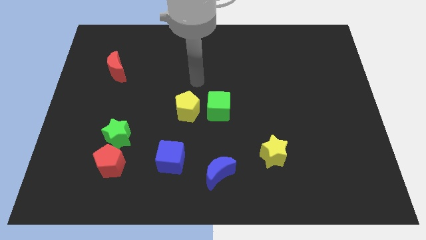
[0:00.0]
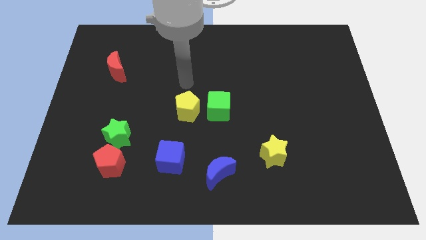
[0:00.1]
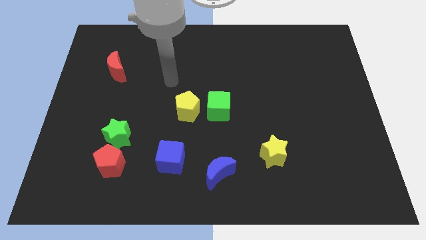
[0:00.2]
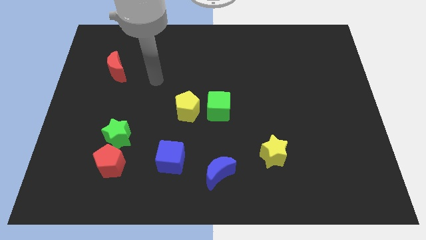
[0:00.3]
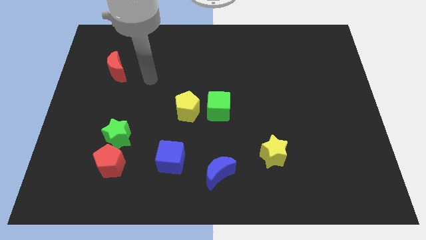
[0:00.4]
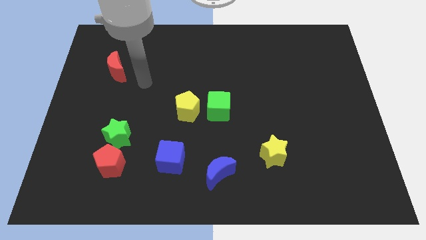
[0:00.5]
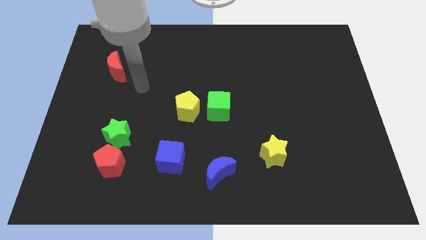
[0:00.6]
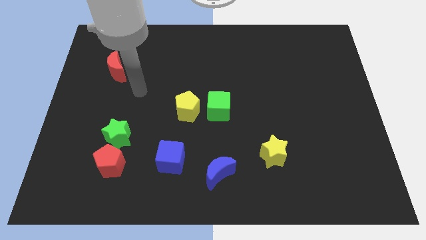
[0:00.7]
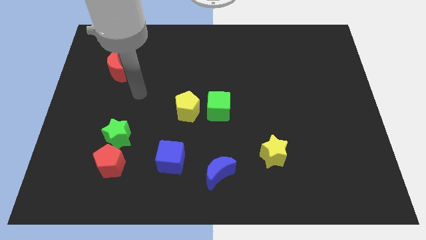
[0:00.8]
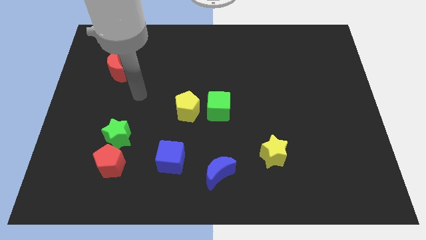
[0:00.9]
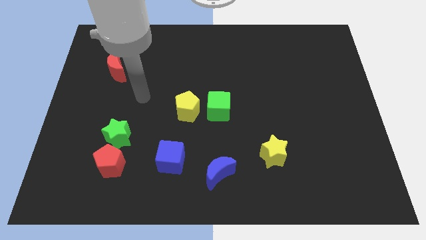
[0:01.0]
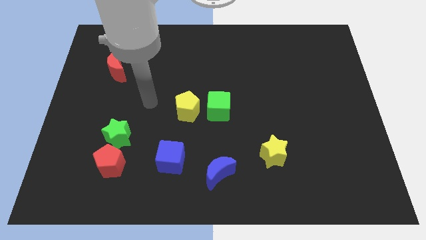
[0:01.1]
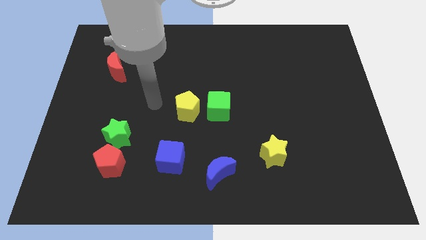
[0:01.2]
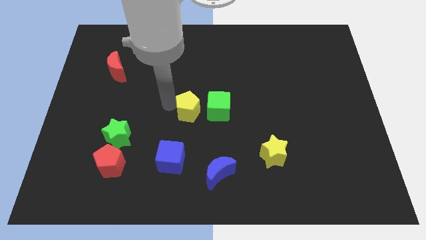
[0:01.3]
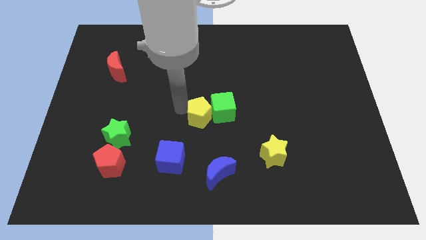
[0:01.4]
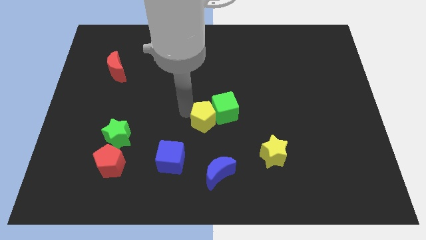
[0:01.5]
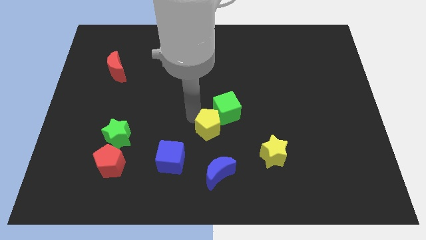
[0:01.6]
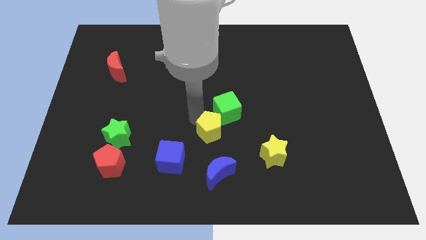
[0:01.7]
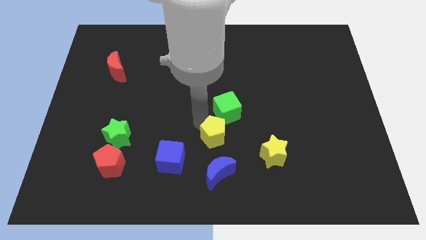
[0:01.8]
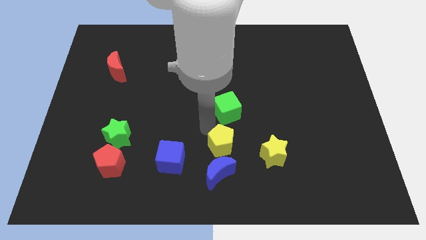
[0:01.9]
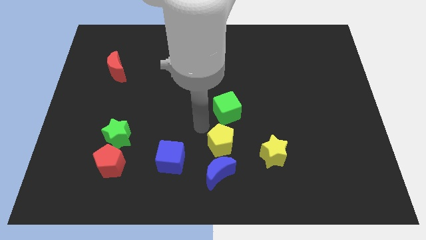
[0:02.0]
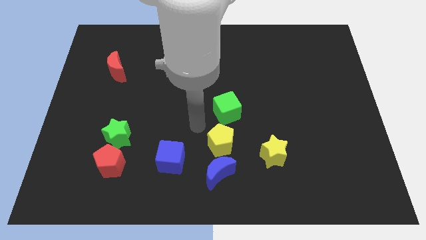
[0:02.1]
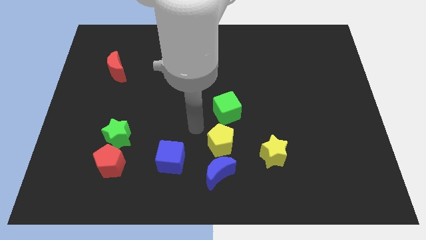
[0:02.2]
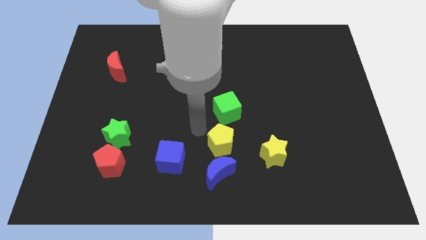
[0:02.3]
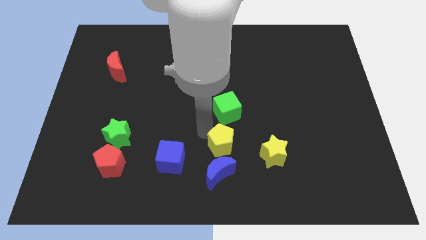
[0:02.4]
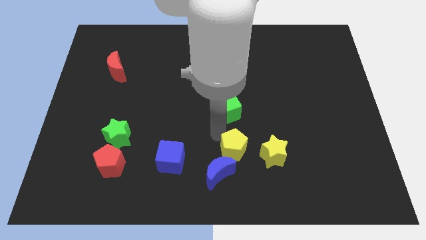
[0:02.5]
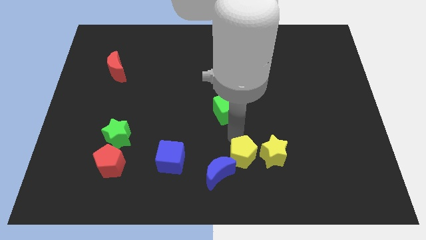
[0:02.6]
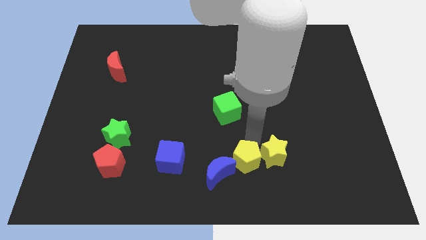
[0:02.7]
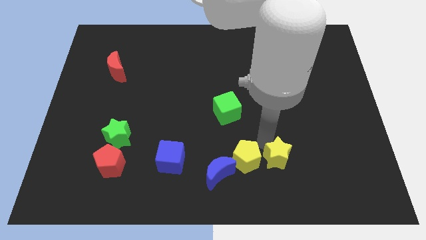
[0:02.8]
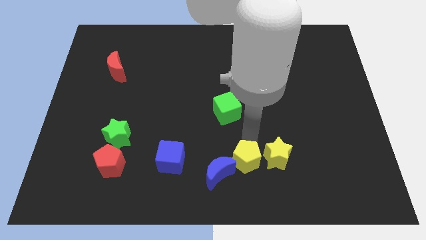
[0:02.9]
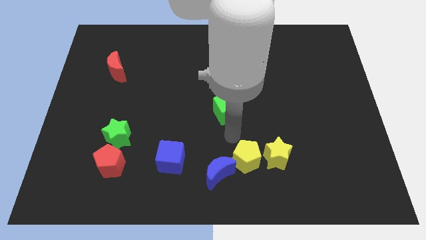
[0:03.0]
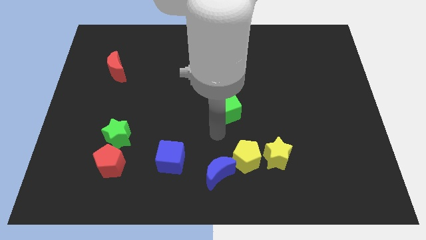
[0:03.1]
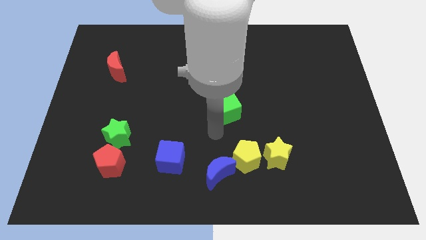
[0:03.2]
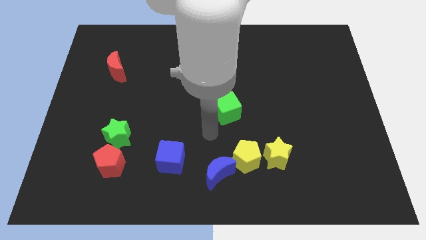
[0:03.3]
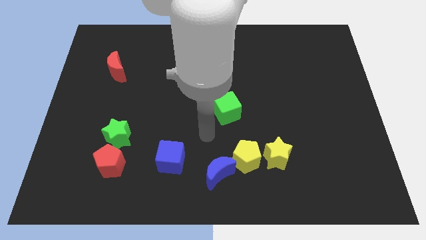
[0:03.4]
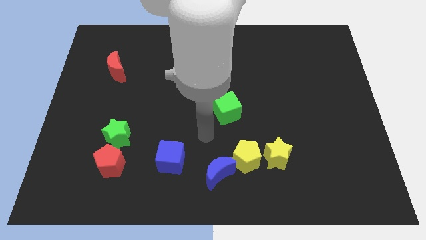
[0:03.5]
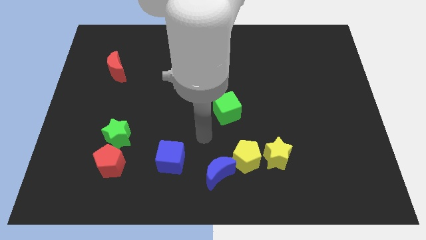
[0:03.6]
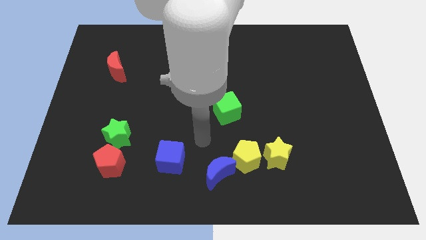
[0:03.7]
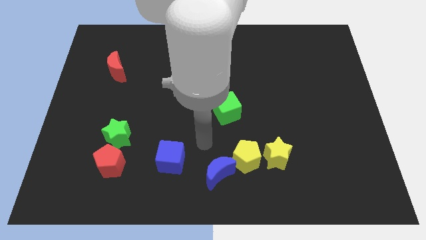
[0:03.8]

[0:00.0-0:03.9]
push the yellow pentagon into the yellow star

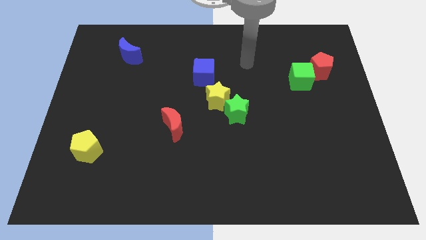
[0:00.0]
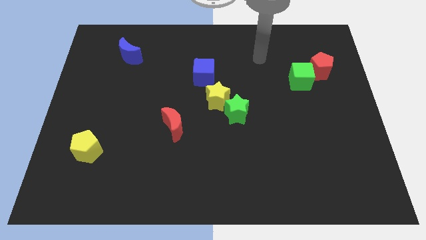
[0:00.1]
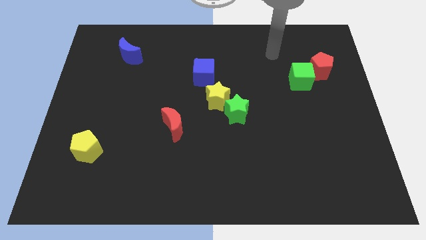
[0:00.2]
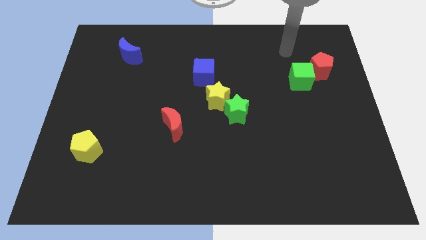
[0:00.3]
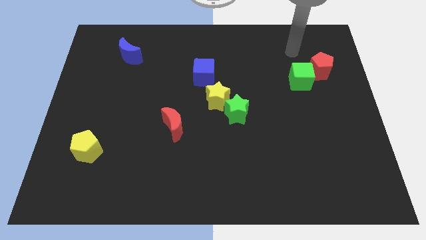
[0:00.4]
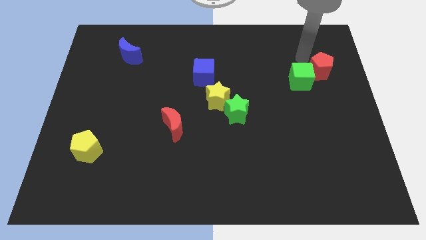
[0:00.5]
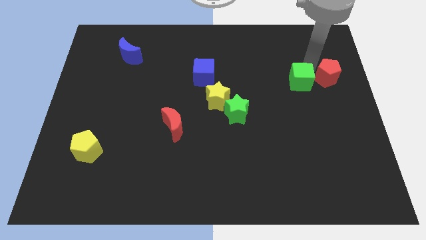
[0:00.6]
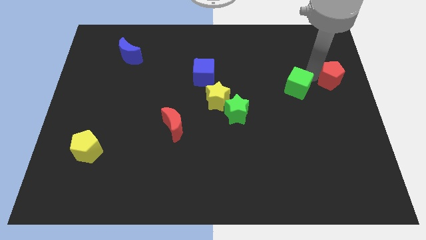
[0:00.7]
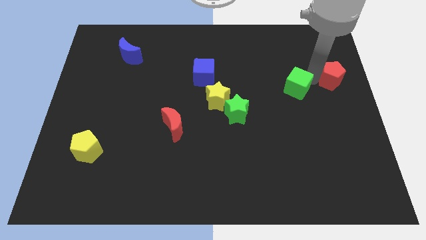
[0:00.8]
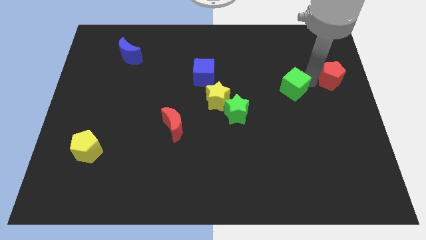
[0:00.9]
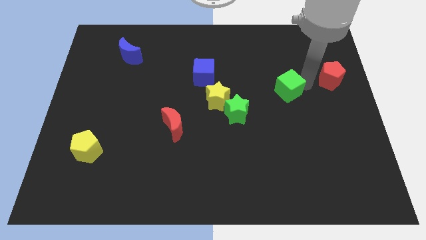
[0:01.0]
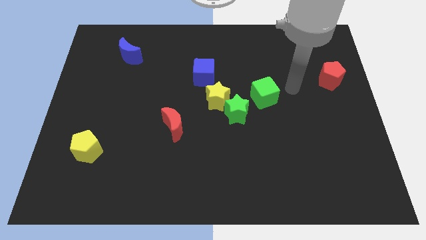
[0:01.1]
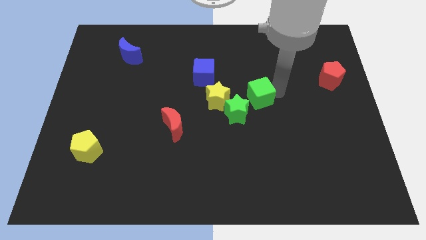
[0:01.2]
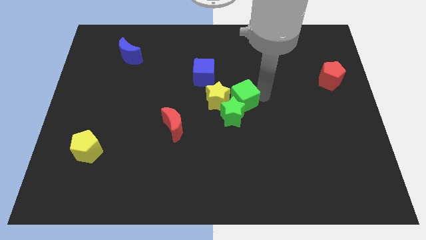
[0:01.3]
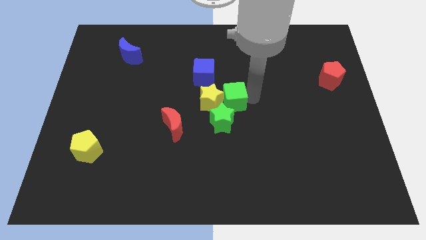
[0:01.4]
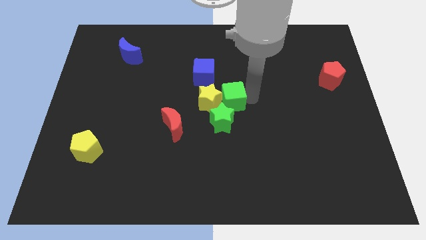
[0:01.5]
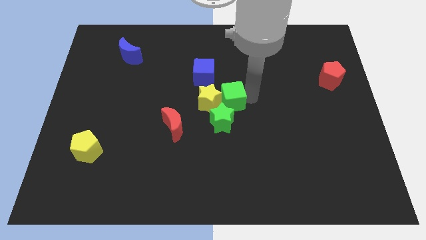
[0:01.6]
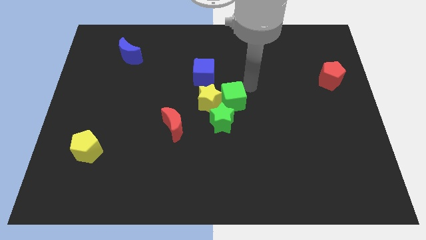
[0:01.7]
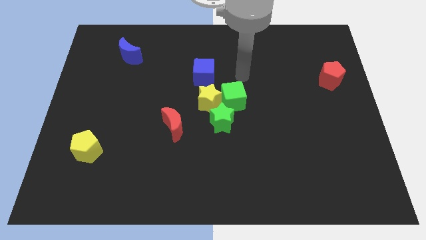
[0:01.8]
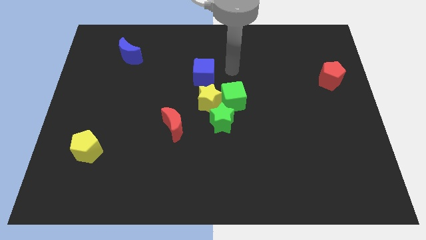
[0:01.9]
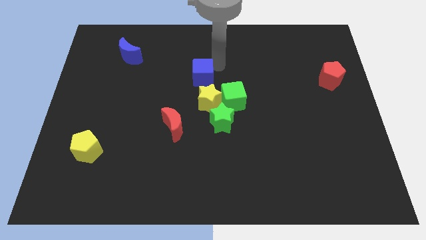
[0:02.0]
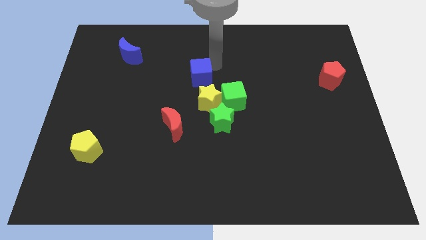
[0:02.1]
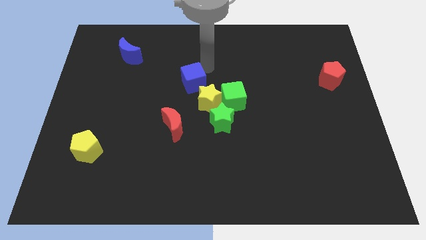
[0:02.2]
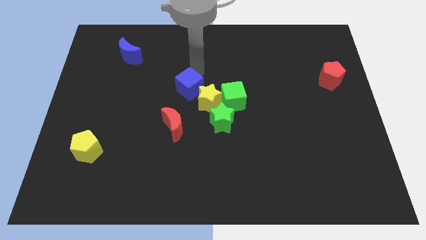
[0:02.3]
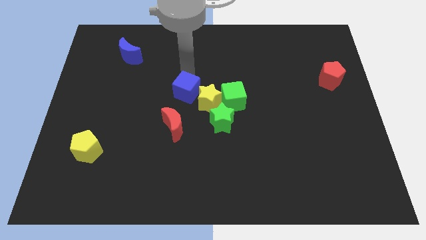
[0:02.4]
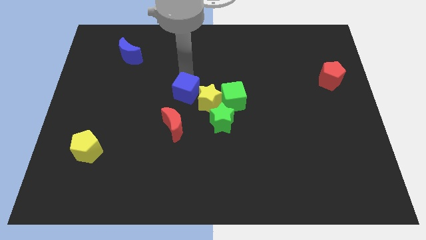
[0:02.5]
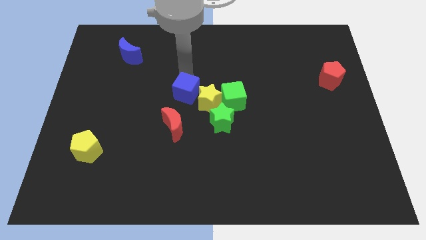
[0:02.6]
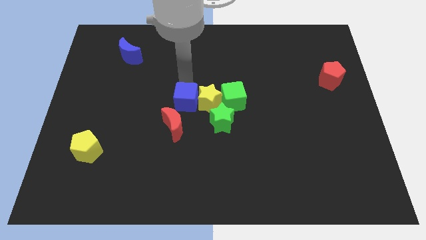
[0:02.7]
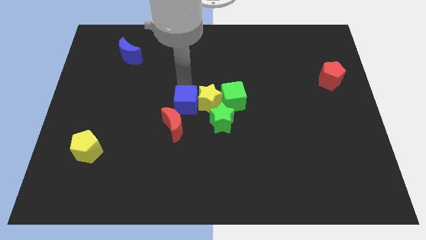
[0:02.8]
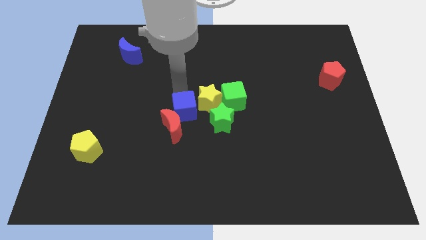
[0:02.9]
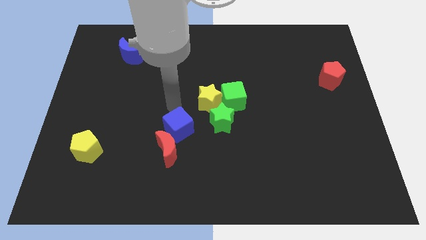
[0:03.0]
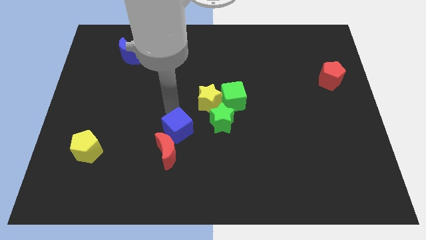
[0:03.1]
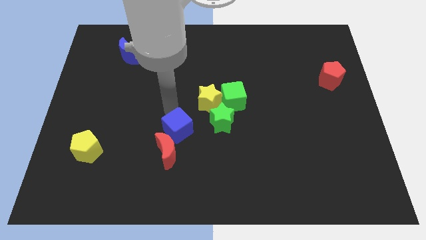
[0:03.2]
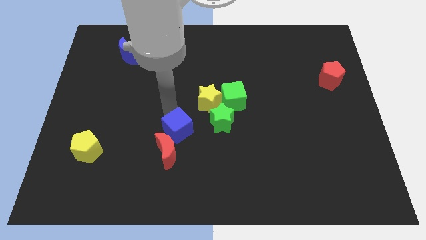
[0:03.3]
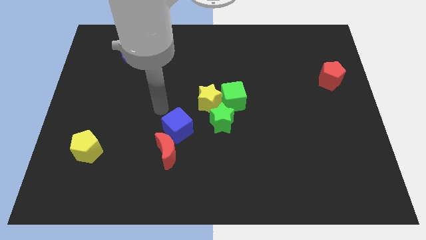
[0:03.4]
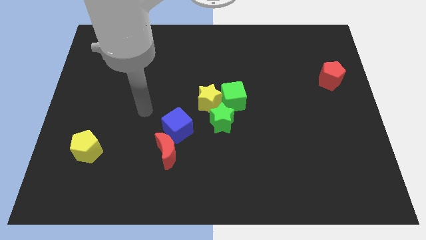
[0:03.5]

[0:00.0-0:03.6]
push the green cube into stars and blue cube into red moon

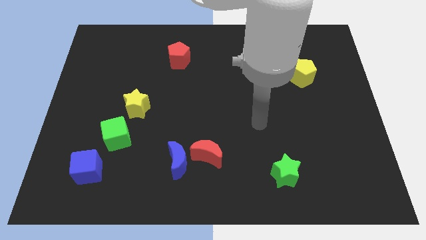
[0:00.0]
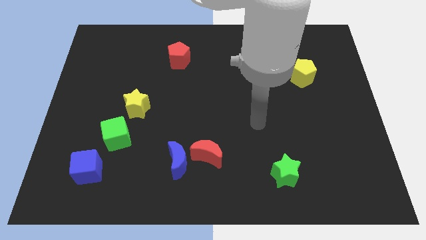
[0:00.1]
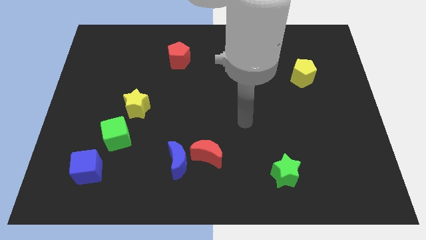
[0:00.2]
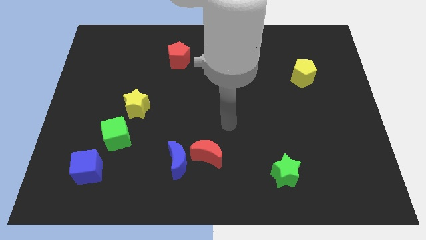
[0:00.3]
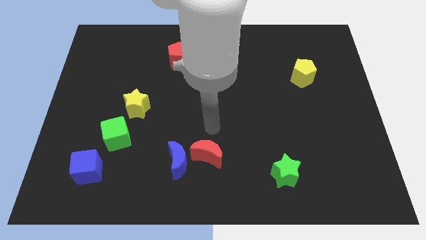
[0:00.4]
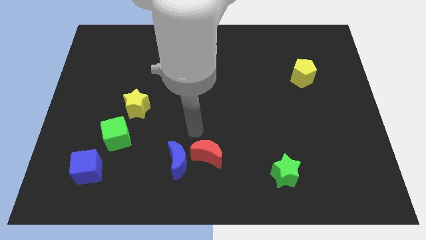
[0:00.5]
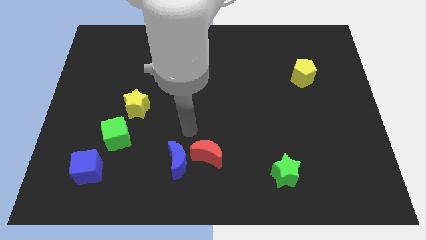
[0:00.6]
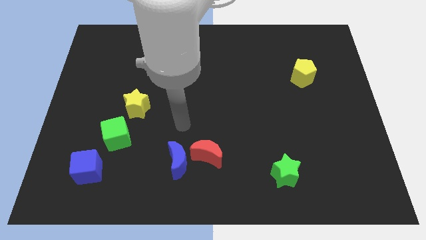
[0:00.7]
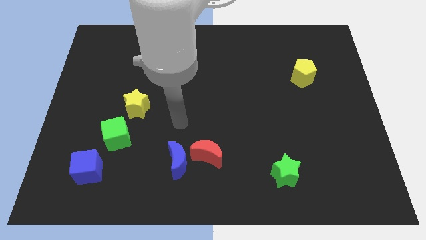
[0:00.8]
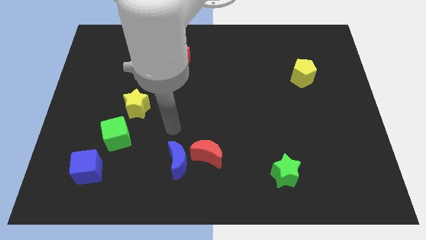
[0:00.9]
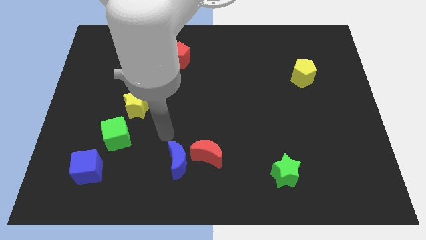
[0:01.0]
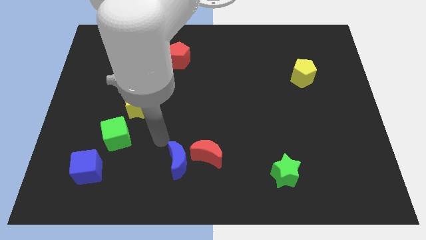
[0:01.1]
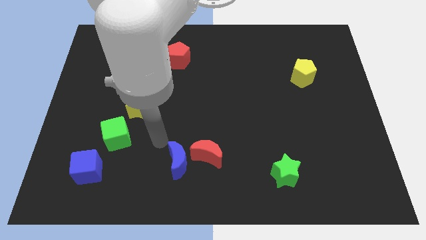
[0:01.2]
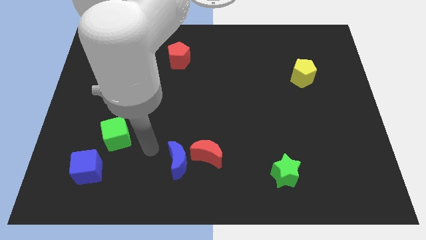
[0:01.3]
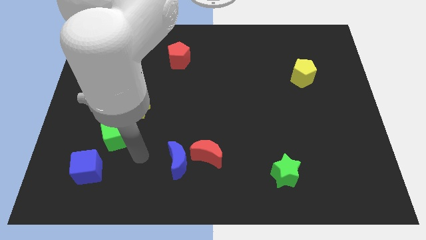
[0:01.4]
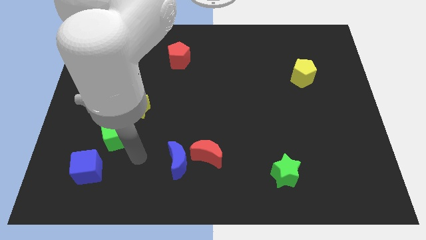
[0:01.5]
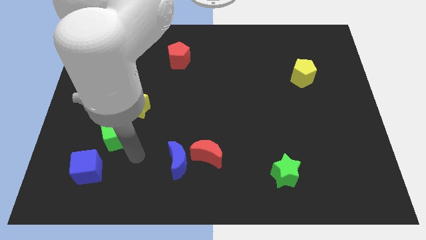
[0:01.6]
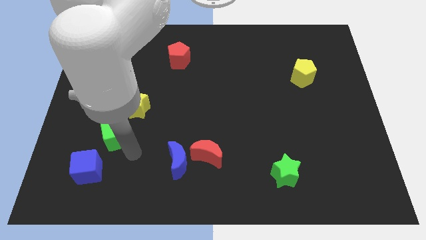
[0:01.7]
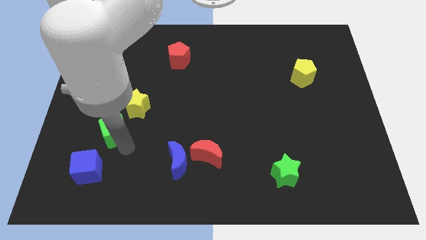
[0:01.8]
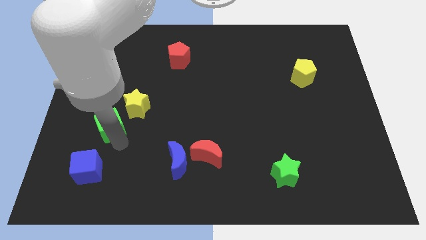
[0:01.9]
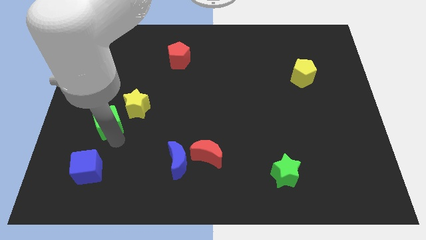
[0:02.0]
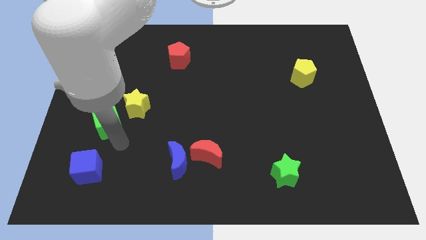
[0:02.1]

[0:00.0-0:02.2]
move your arm to the green cube
